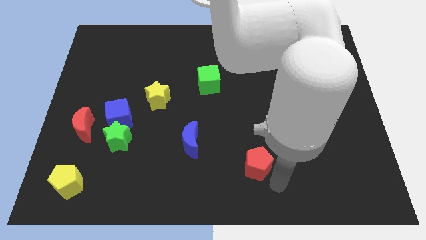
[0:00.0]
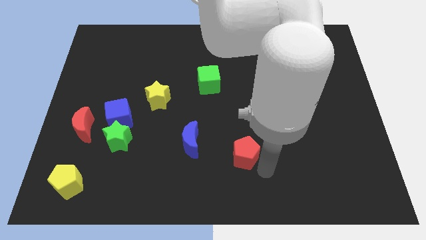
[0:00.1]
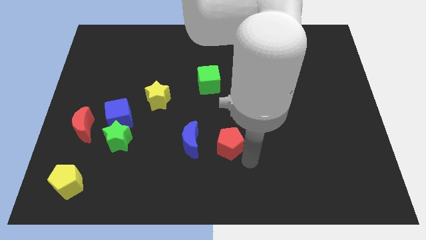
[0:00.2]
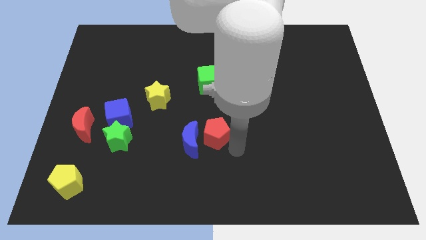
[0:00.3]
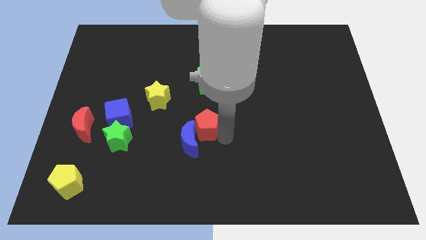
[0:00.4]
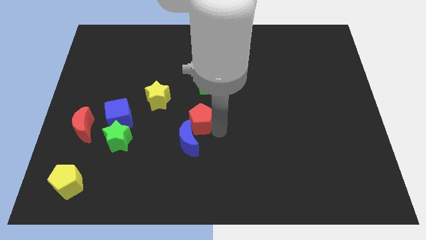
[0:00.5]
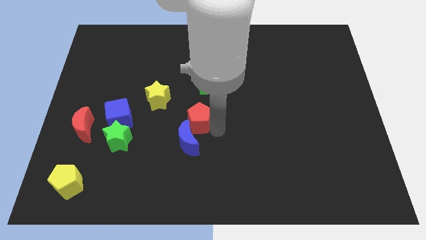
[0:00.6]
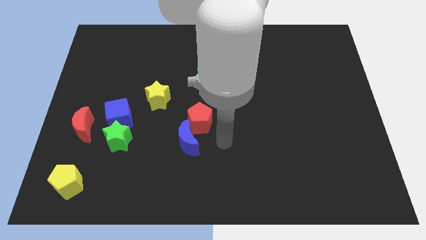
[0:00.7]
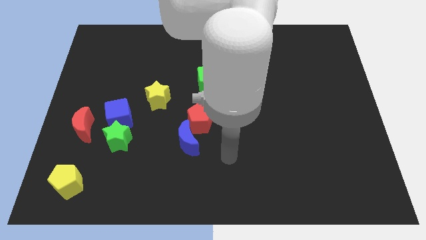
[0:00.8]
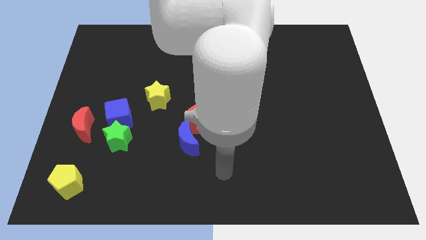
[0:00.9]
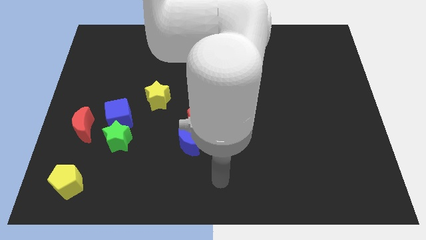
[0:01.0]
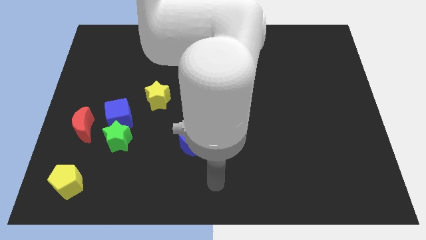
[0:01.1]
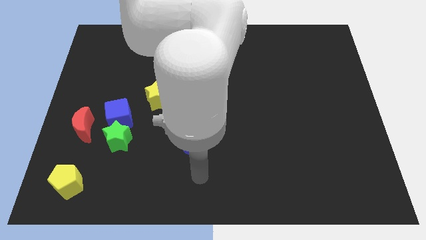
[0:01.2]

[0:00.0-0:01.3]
move the red pentagon to the top of the blue crescent

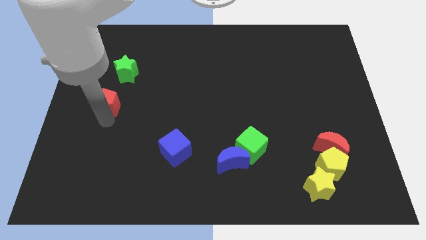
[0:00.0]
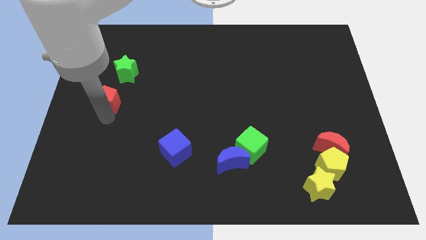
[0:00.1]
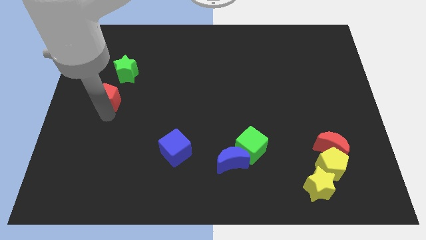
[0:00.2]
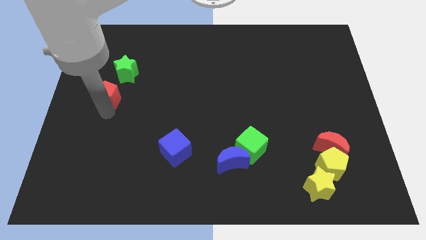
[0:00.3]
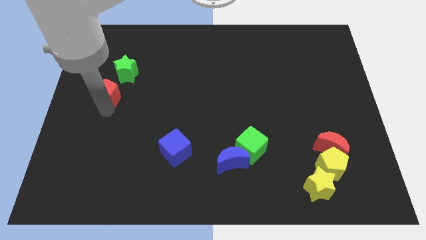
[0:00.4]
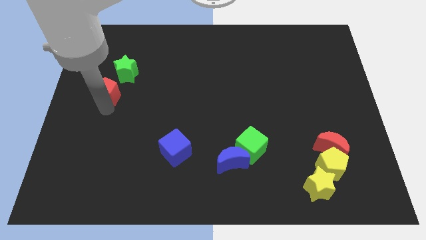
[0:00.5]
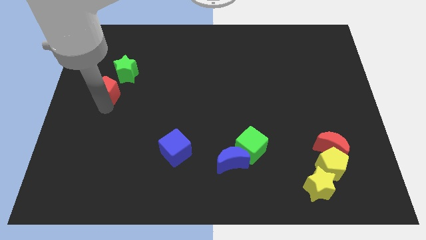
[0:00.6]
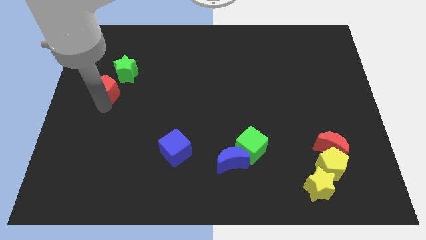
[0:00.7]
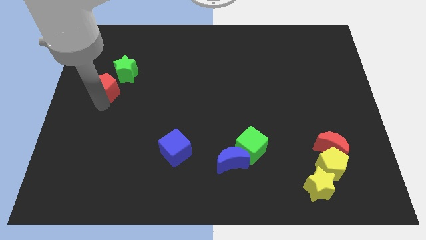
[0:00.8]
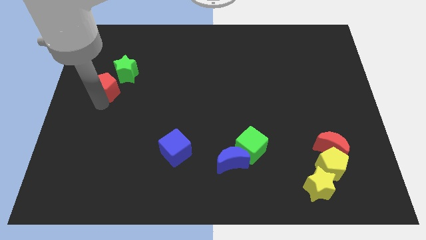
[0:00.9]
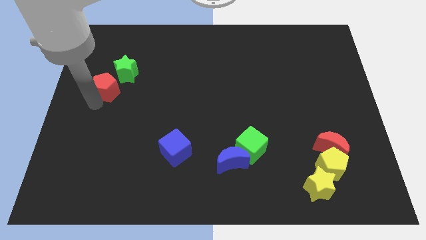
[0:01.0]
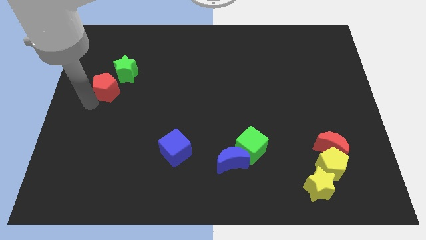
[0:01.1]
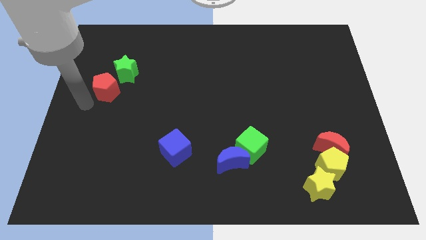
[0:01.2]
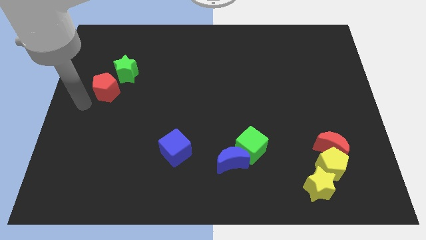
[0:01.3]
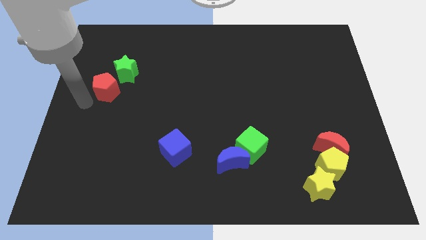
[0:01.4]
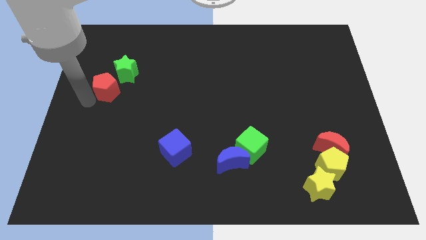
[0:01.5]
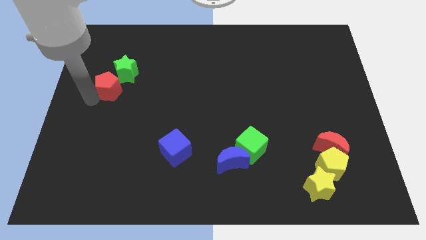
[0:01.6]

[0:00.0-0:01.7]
move the red pentagon towards the green star

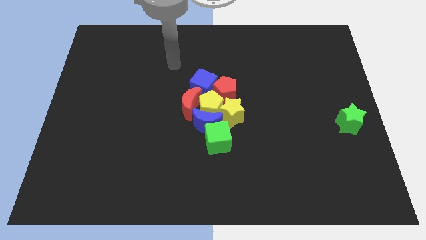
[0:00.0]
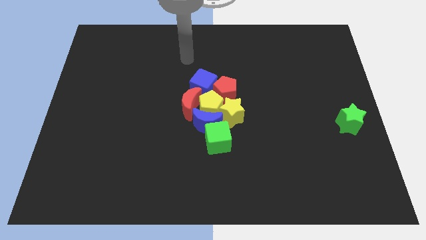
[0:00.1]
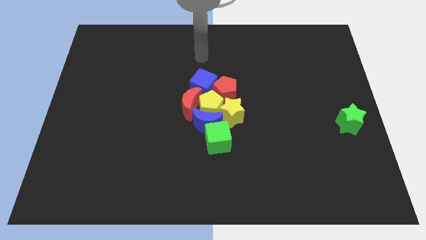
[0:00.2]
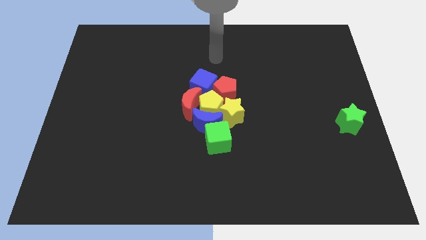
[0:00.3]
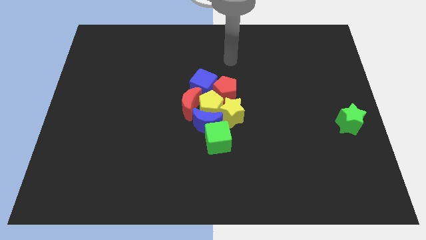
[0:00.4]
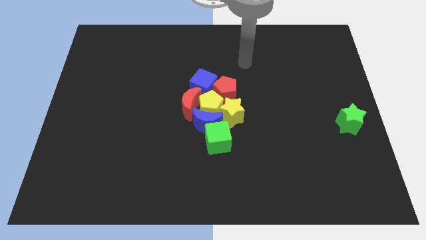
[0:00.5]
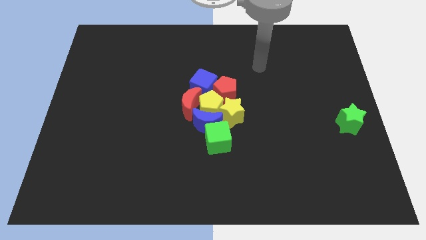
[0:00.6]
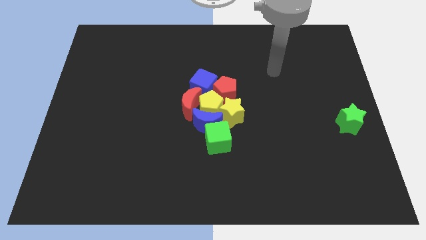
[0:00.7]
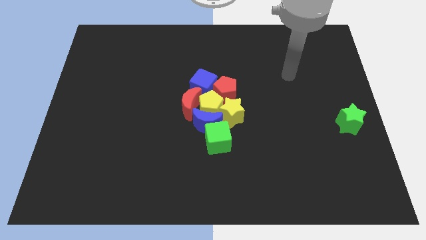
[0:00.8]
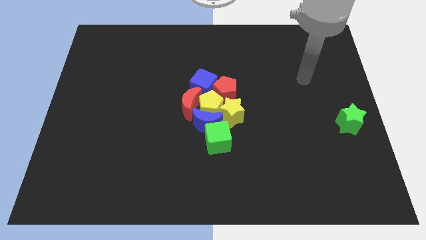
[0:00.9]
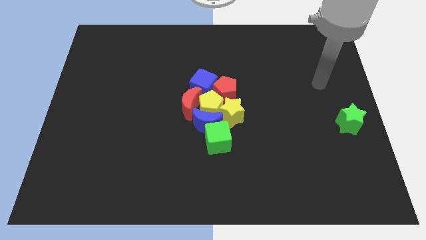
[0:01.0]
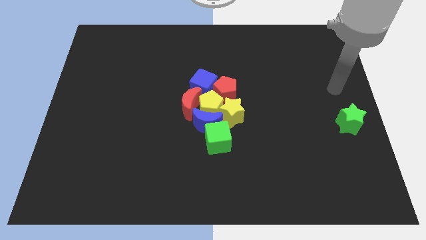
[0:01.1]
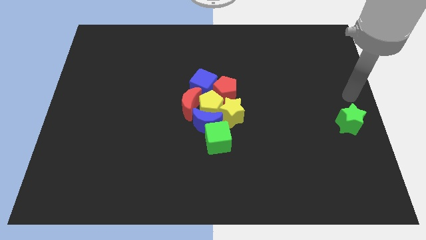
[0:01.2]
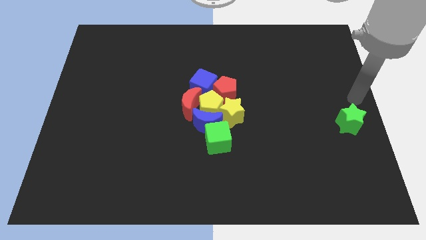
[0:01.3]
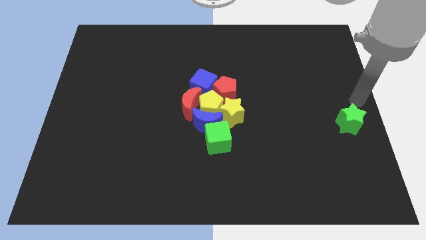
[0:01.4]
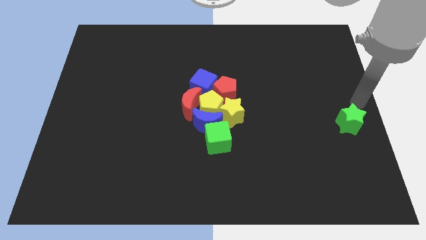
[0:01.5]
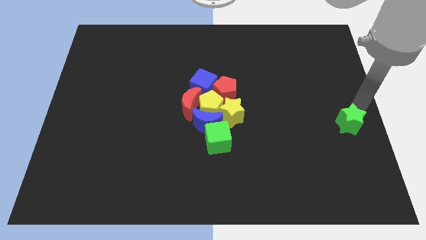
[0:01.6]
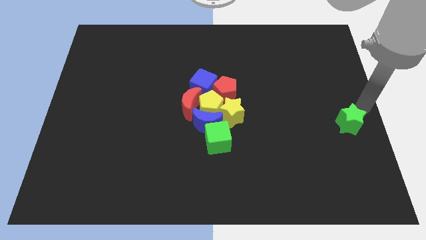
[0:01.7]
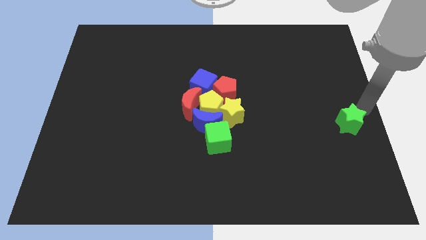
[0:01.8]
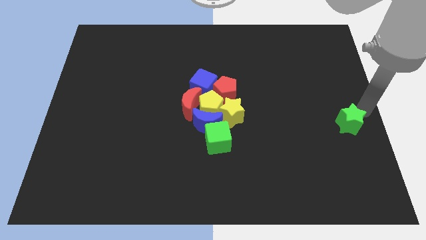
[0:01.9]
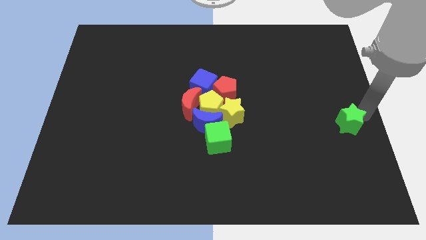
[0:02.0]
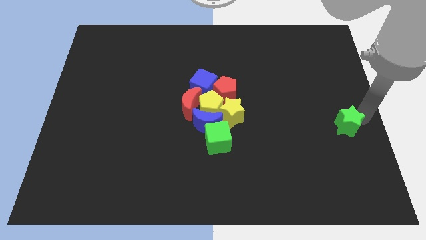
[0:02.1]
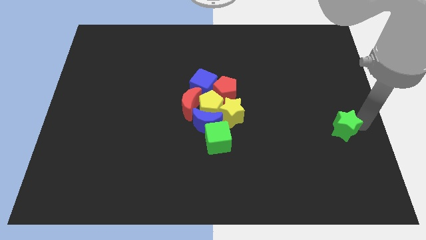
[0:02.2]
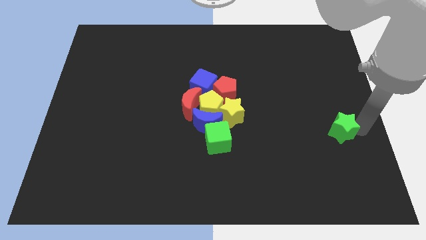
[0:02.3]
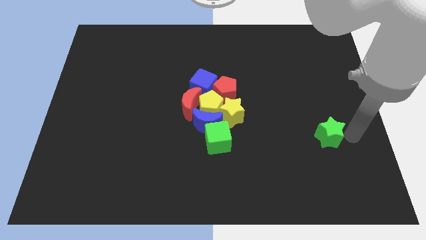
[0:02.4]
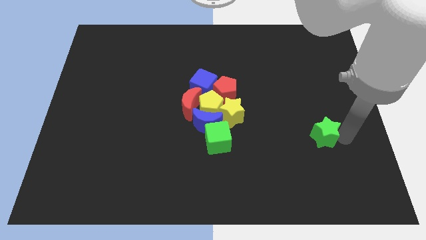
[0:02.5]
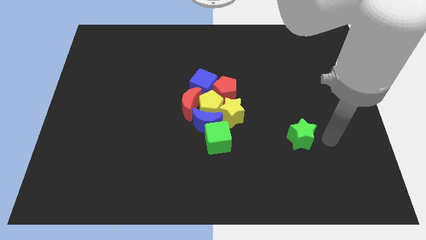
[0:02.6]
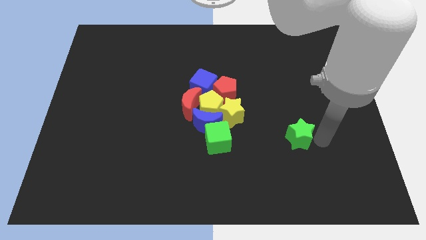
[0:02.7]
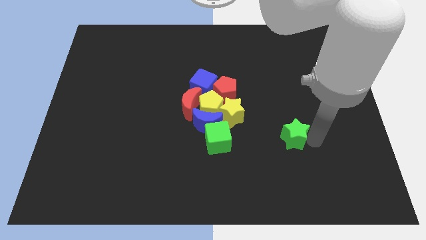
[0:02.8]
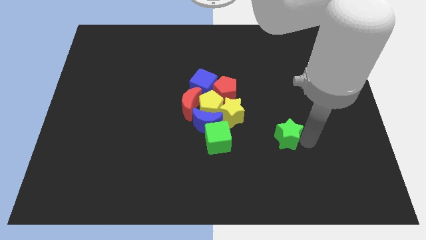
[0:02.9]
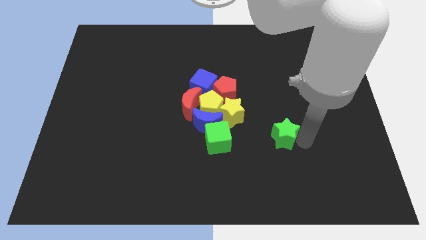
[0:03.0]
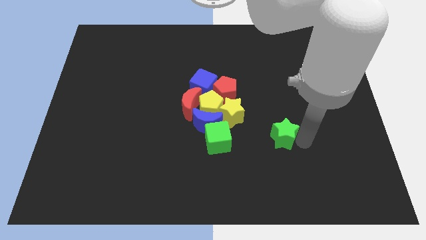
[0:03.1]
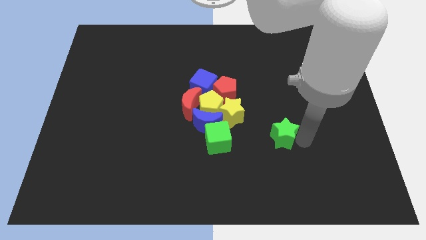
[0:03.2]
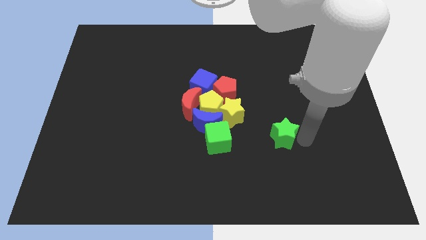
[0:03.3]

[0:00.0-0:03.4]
place the green star horizontally to the right side of the green cube

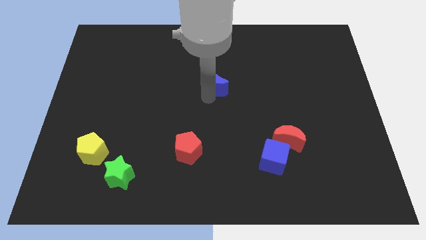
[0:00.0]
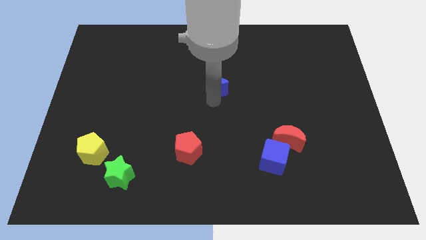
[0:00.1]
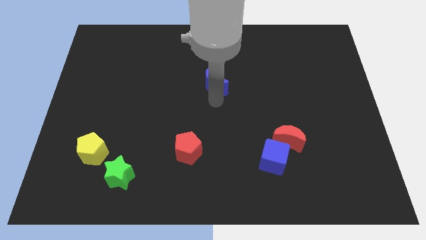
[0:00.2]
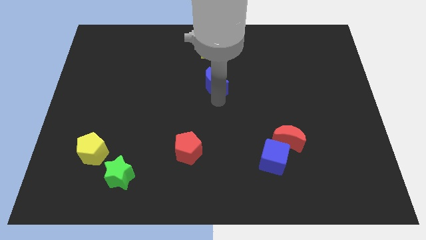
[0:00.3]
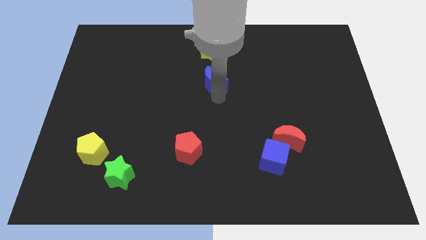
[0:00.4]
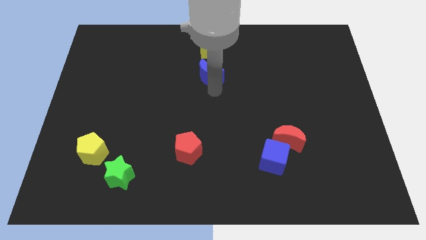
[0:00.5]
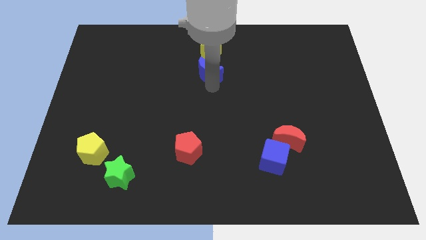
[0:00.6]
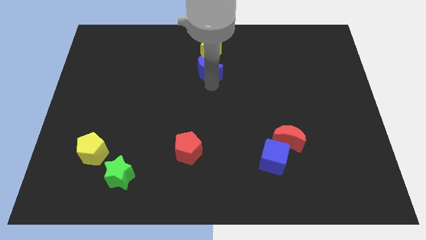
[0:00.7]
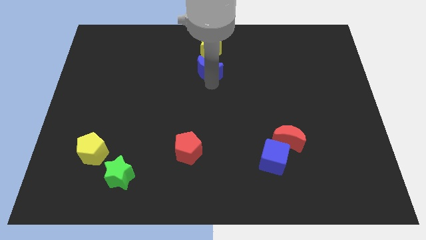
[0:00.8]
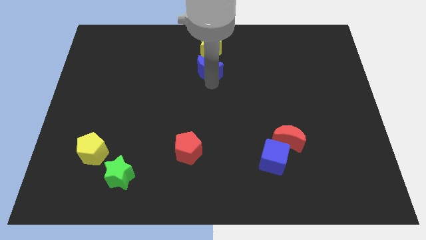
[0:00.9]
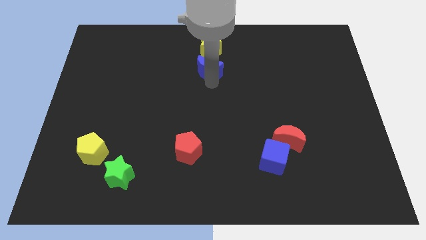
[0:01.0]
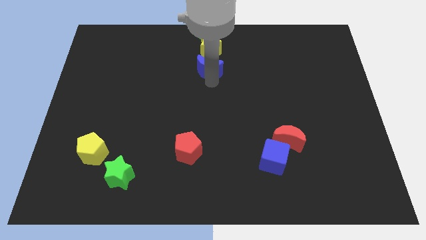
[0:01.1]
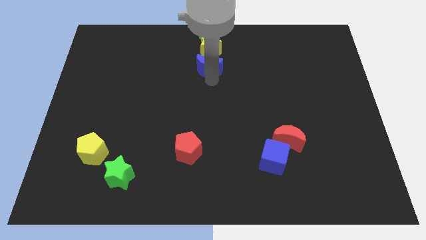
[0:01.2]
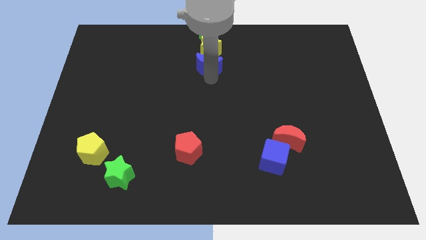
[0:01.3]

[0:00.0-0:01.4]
place the blue moon below the yellow star

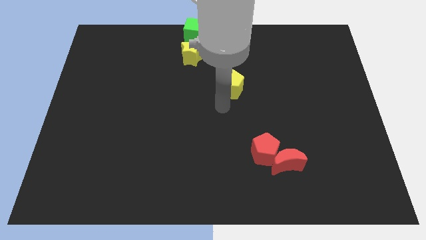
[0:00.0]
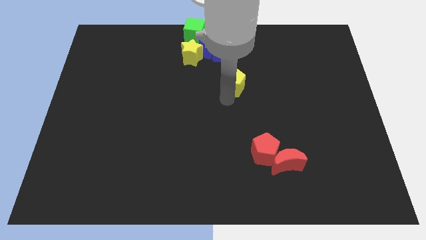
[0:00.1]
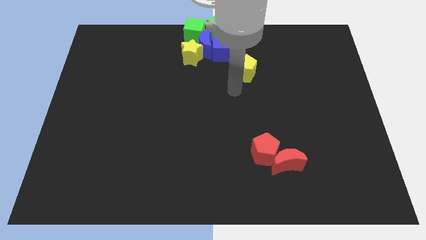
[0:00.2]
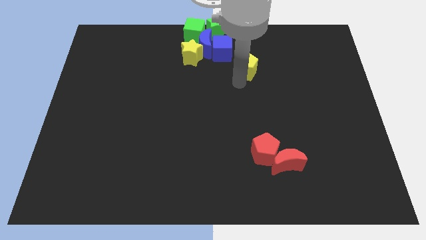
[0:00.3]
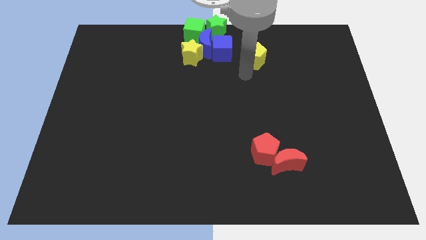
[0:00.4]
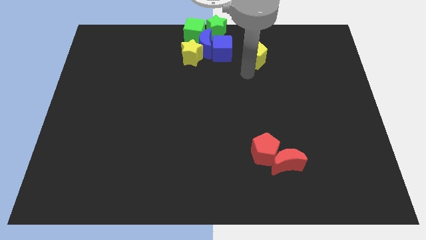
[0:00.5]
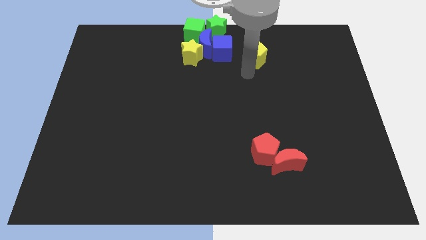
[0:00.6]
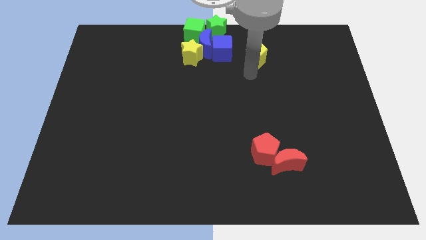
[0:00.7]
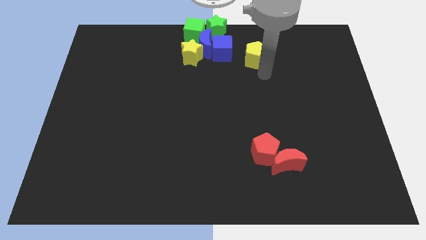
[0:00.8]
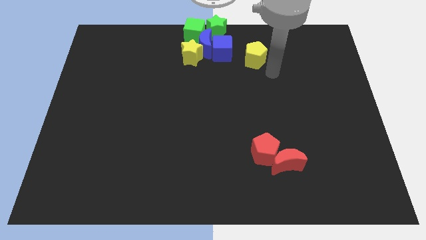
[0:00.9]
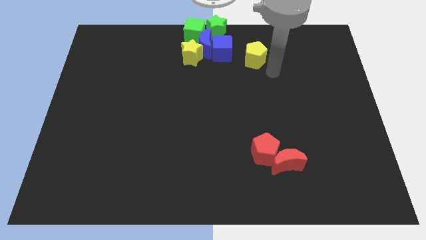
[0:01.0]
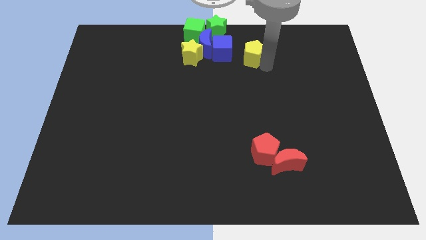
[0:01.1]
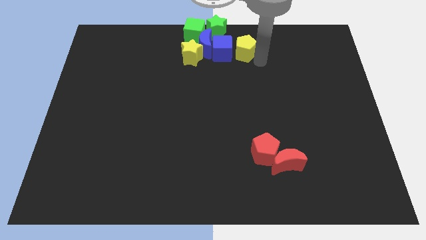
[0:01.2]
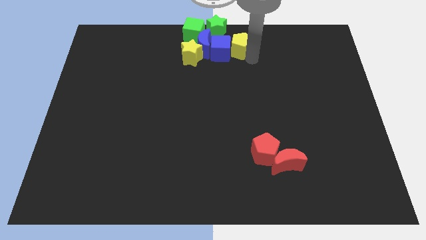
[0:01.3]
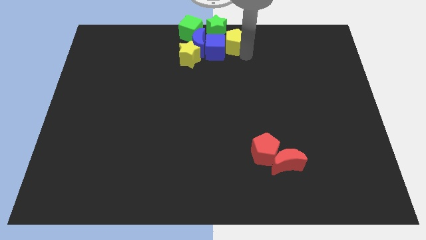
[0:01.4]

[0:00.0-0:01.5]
move the yellow pentagon to the right of the blue cube
